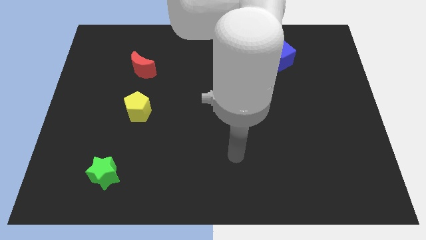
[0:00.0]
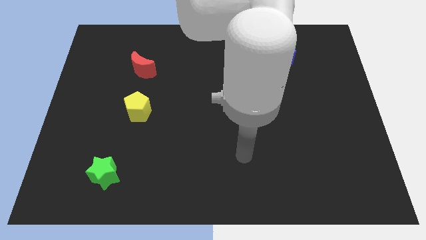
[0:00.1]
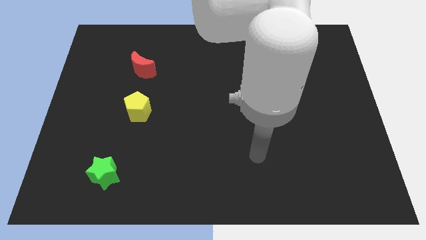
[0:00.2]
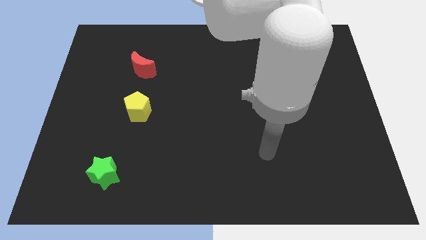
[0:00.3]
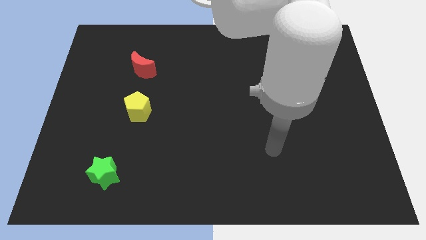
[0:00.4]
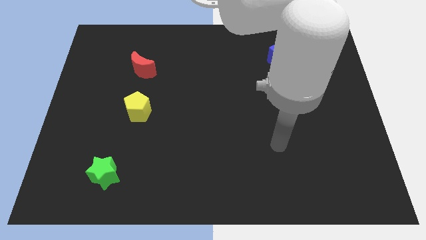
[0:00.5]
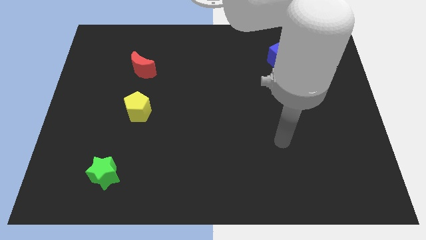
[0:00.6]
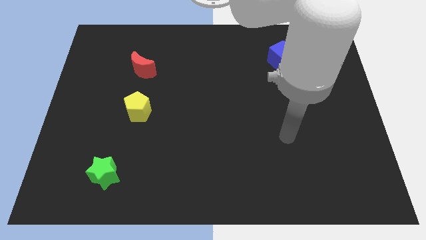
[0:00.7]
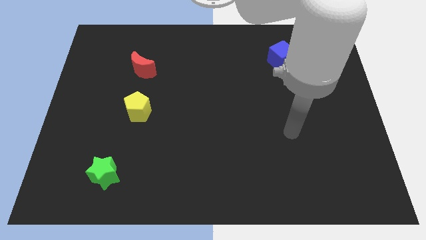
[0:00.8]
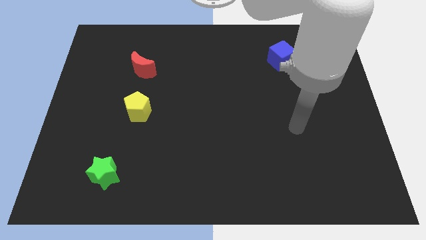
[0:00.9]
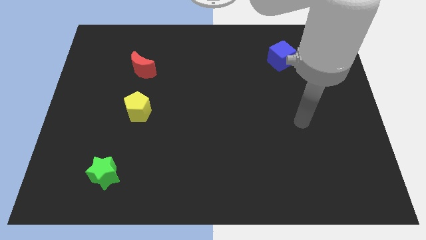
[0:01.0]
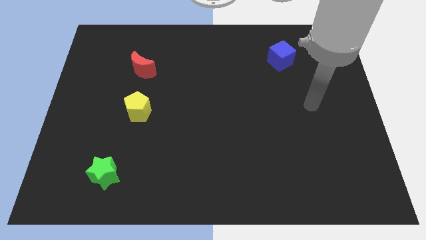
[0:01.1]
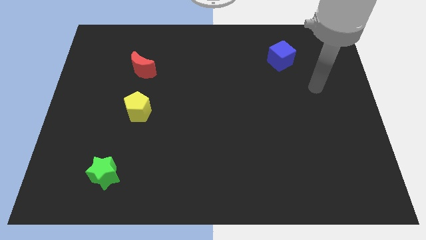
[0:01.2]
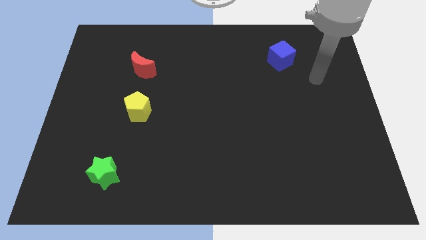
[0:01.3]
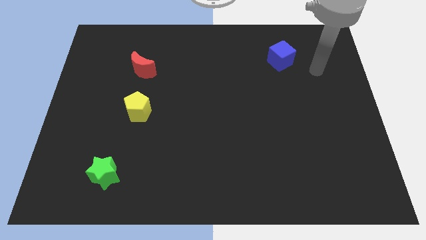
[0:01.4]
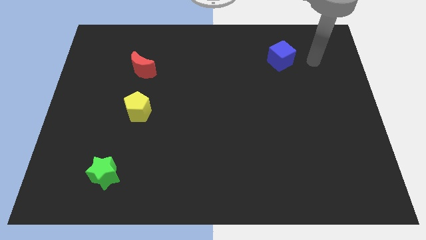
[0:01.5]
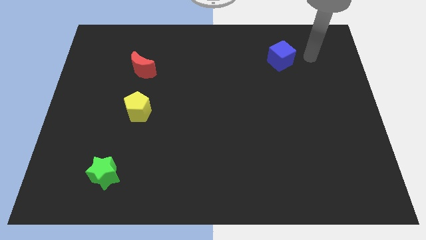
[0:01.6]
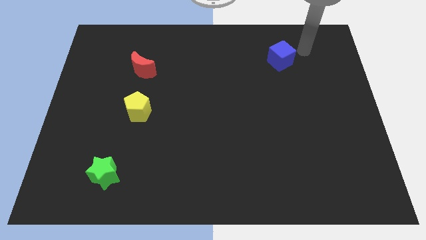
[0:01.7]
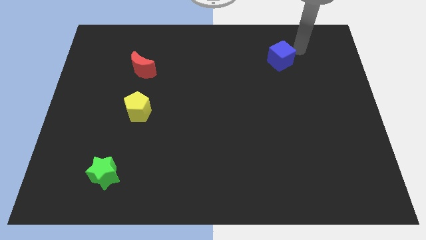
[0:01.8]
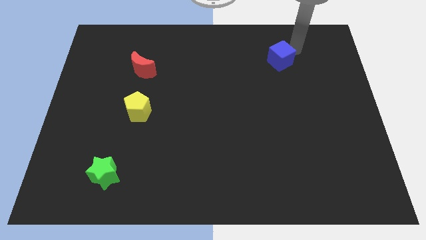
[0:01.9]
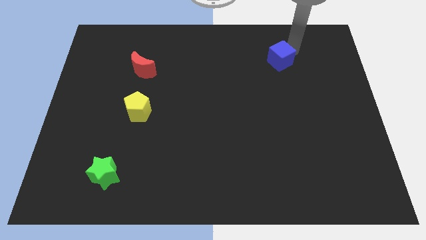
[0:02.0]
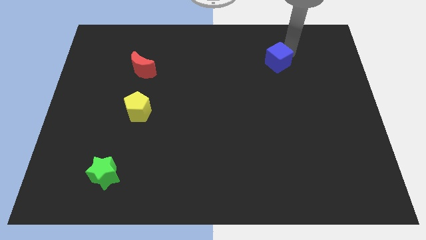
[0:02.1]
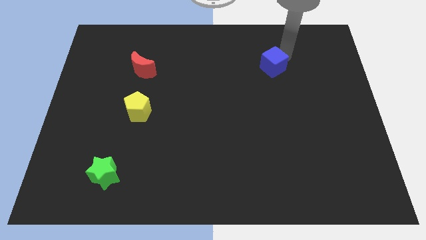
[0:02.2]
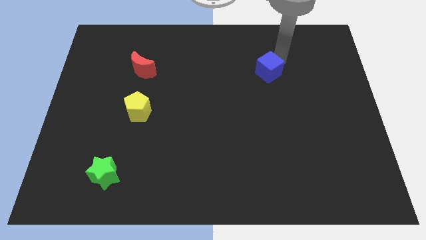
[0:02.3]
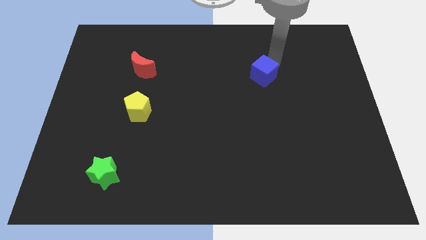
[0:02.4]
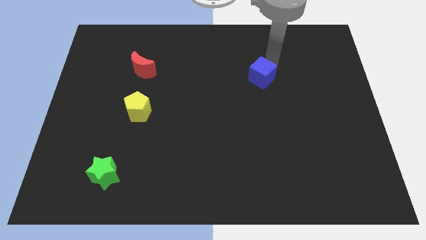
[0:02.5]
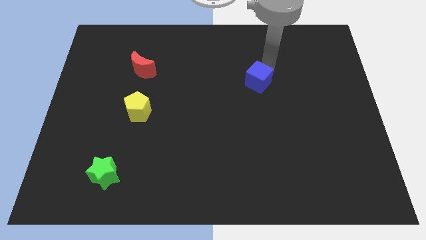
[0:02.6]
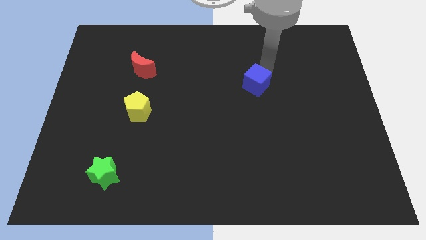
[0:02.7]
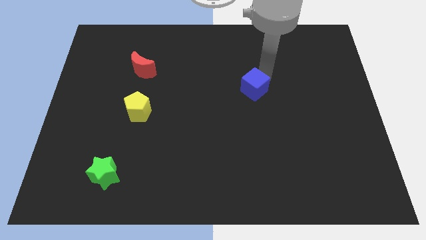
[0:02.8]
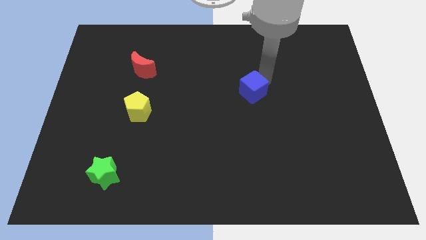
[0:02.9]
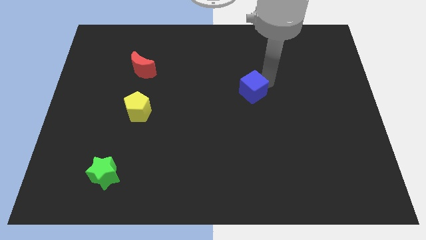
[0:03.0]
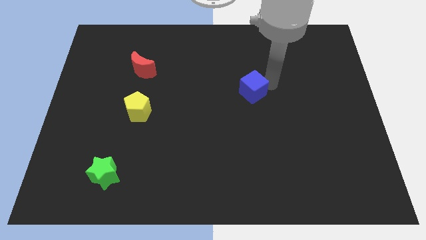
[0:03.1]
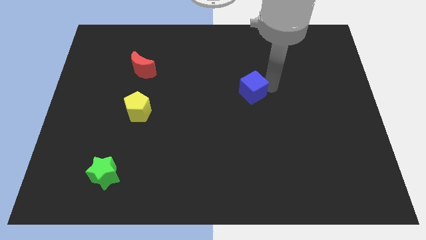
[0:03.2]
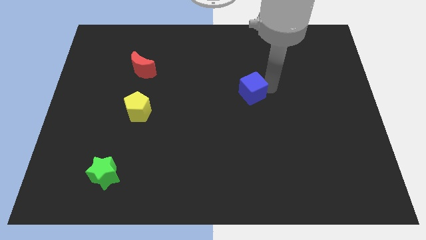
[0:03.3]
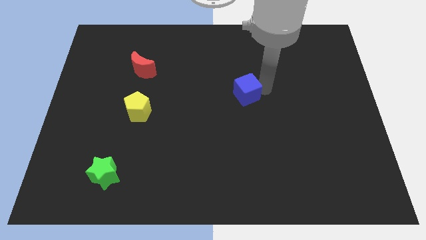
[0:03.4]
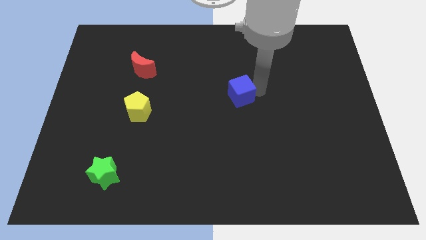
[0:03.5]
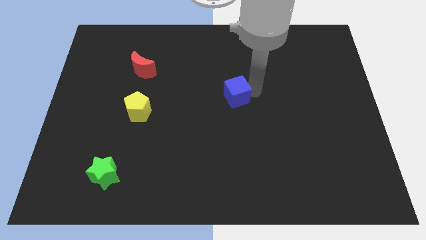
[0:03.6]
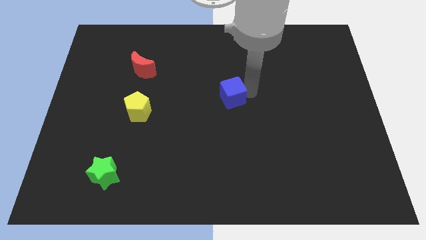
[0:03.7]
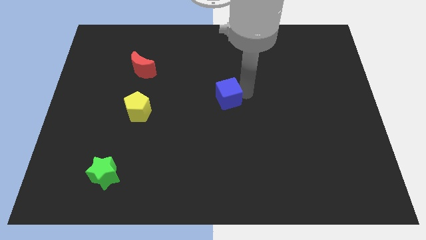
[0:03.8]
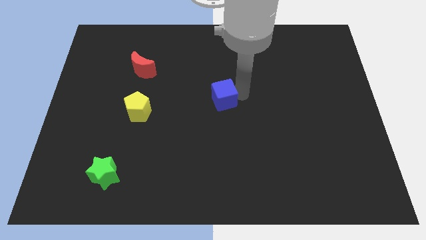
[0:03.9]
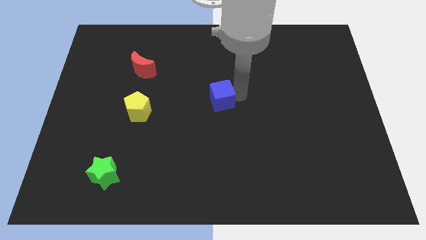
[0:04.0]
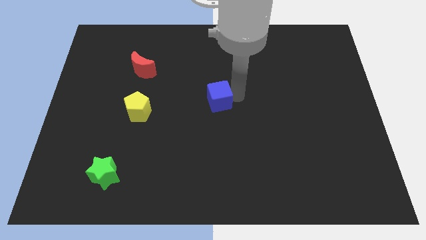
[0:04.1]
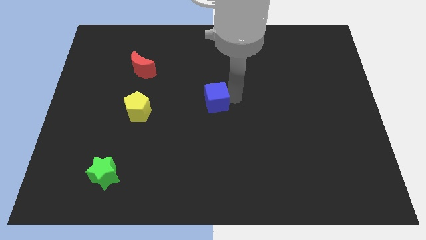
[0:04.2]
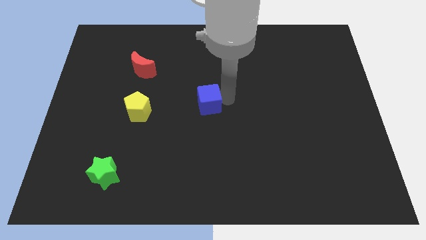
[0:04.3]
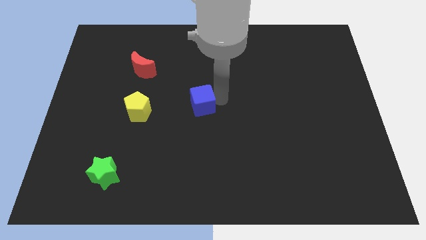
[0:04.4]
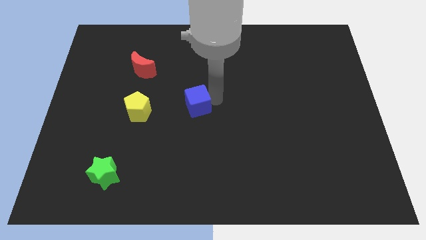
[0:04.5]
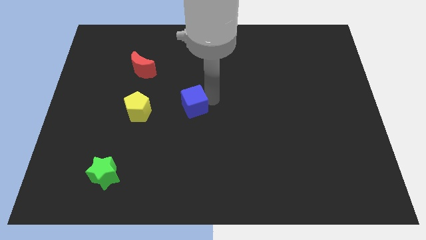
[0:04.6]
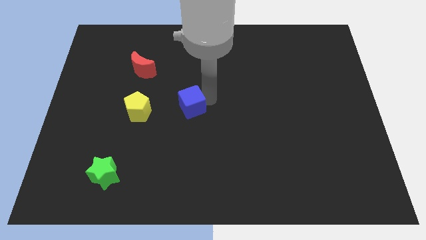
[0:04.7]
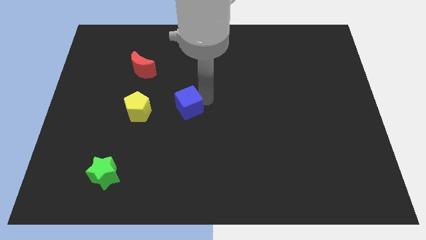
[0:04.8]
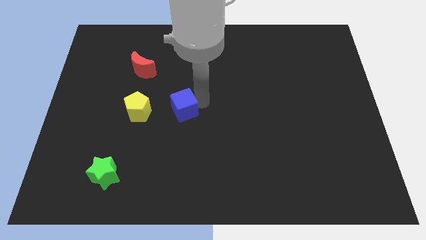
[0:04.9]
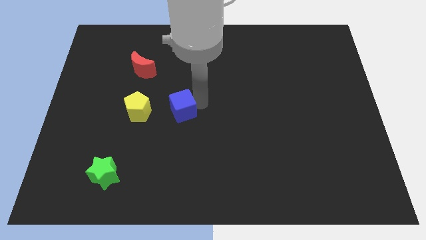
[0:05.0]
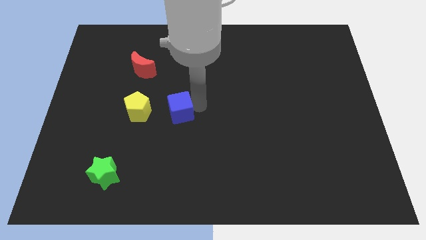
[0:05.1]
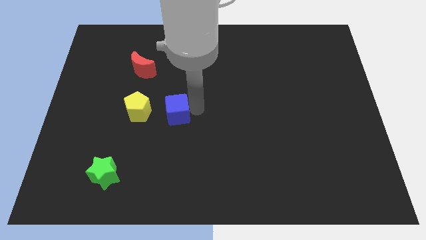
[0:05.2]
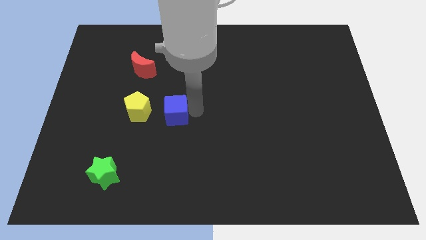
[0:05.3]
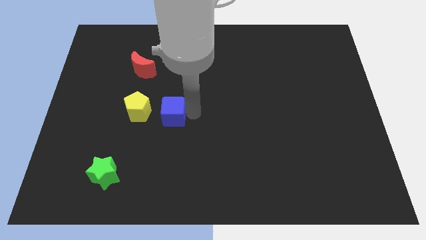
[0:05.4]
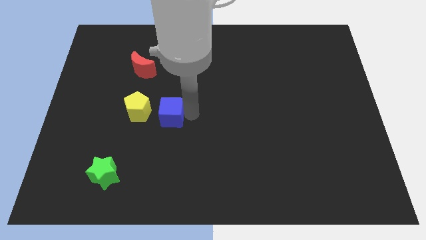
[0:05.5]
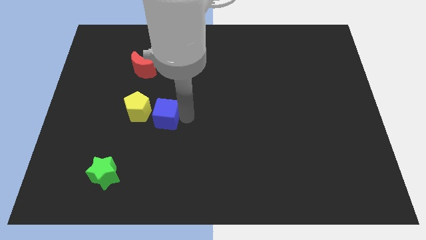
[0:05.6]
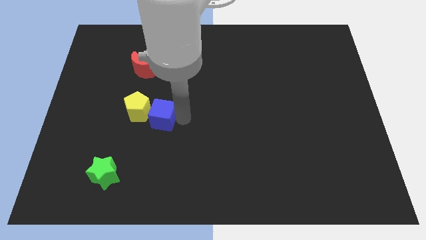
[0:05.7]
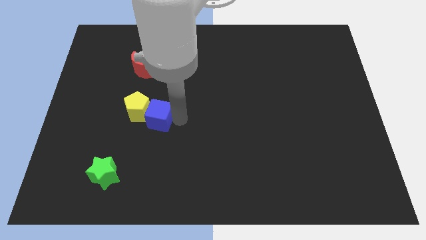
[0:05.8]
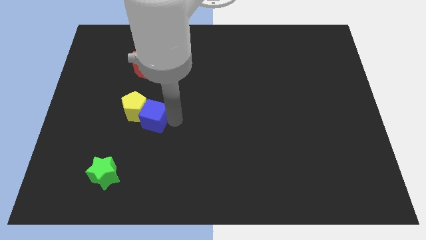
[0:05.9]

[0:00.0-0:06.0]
put the cube next to the yellow pentagon

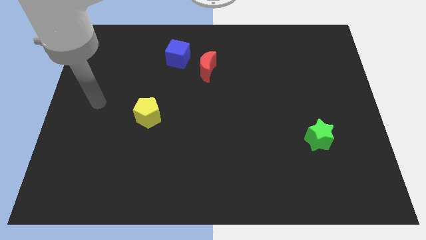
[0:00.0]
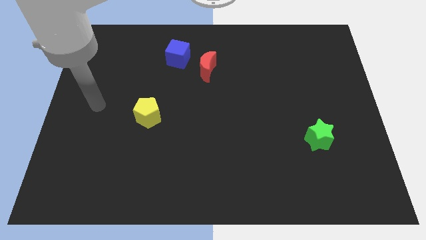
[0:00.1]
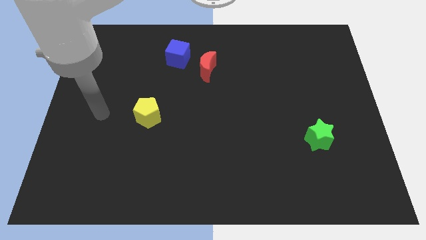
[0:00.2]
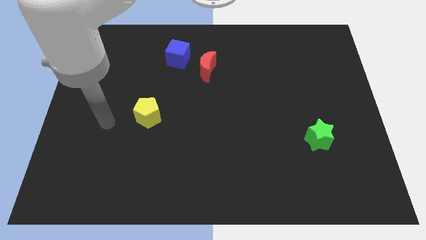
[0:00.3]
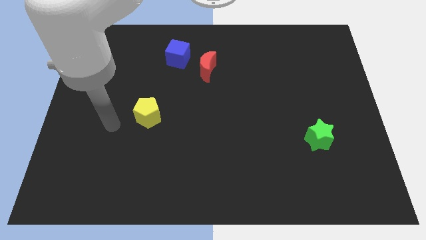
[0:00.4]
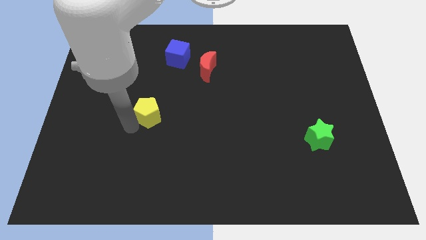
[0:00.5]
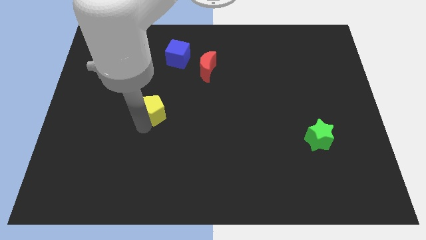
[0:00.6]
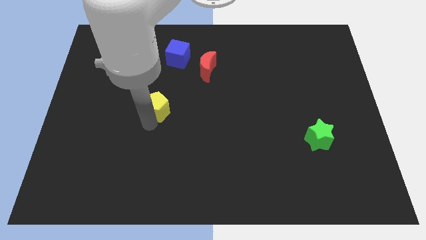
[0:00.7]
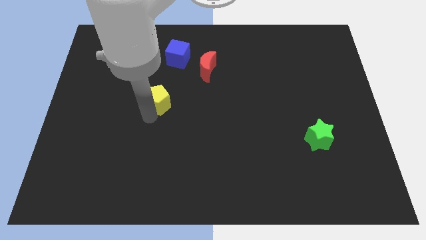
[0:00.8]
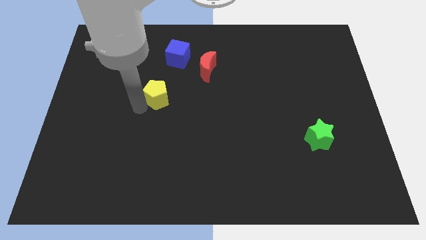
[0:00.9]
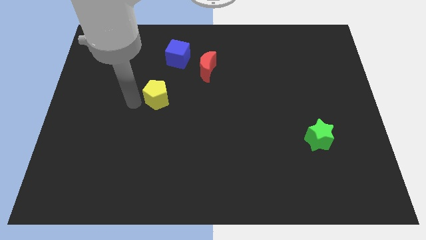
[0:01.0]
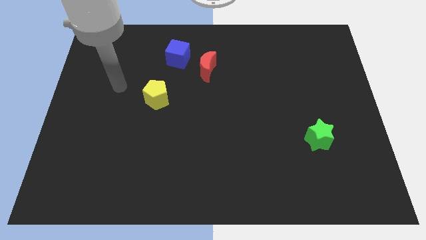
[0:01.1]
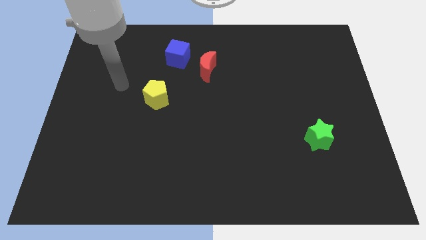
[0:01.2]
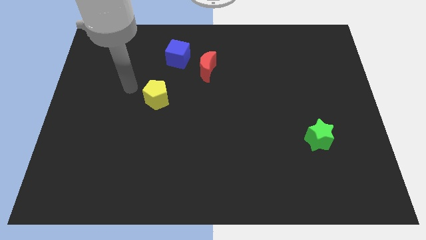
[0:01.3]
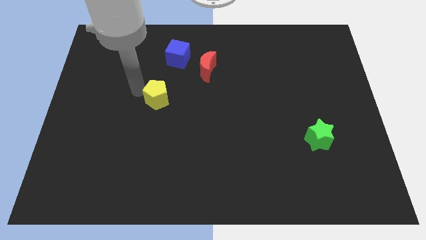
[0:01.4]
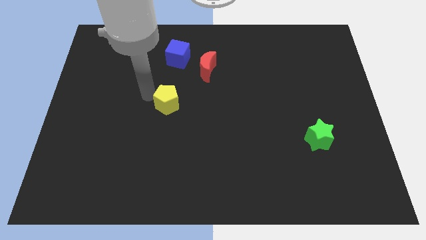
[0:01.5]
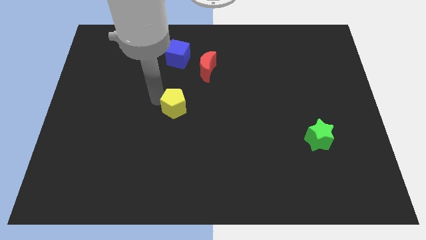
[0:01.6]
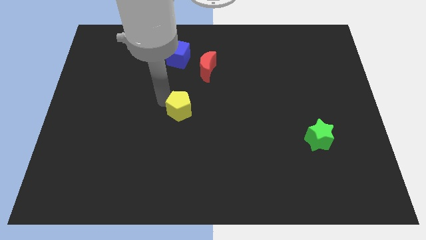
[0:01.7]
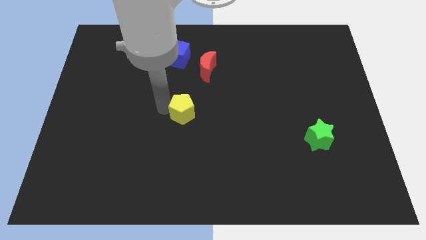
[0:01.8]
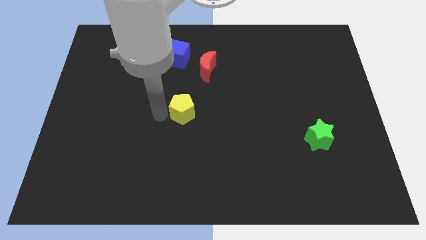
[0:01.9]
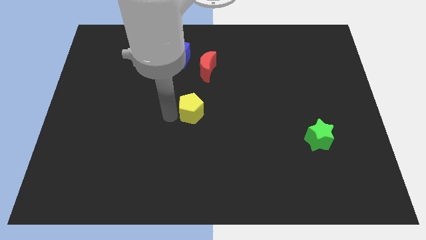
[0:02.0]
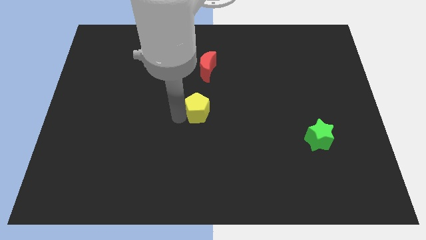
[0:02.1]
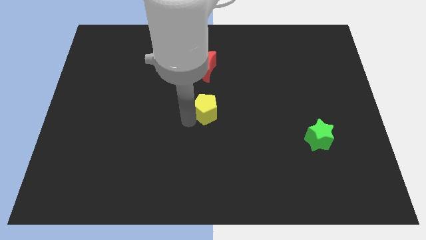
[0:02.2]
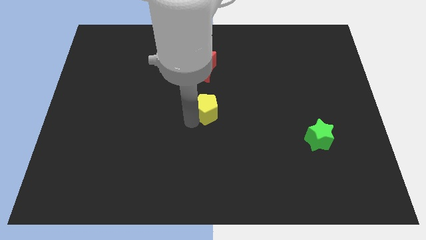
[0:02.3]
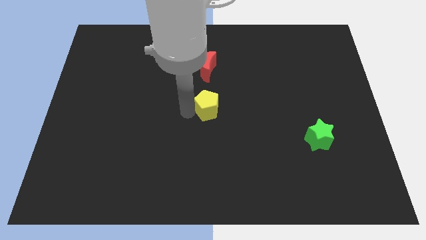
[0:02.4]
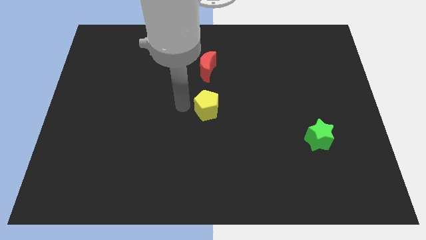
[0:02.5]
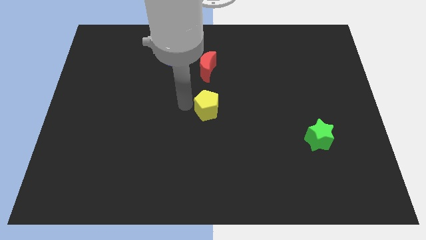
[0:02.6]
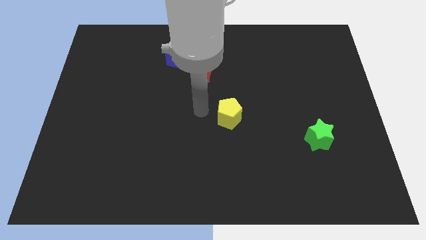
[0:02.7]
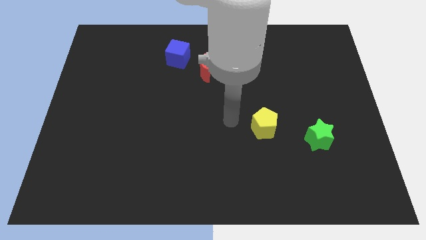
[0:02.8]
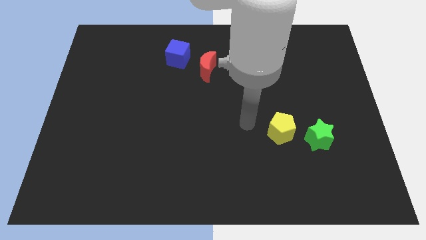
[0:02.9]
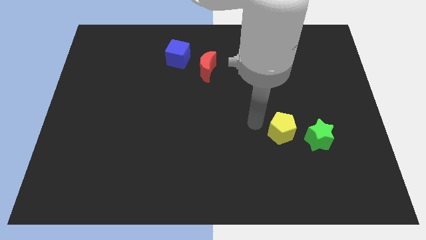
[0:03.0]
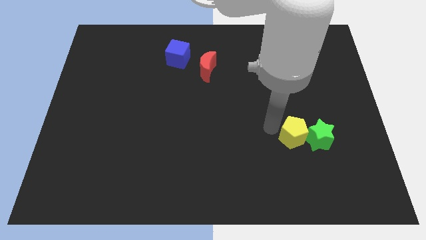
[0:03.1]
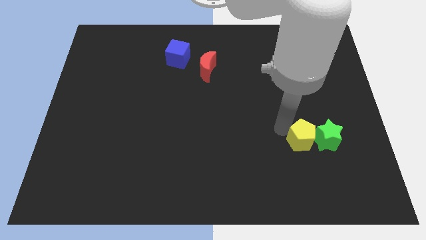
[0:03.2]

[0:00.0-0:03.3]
push the yellow block next to the green star
